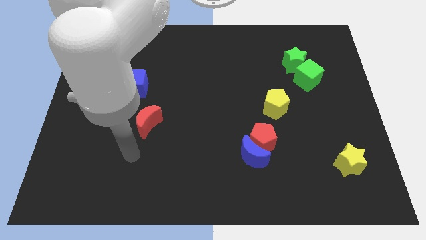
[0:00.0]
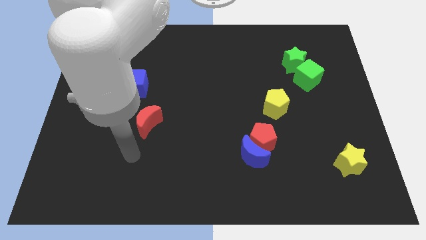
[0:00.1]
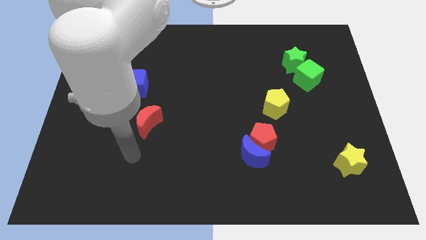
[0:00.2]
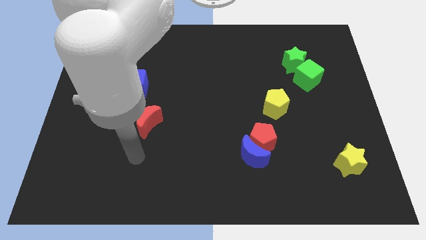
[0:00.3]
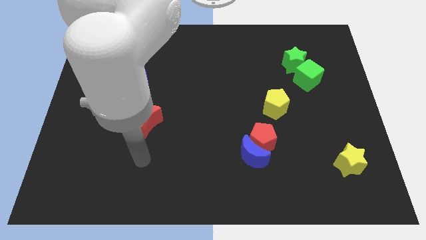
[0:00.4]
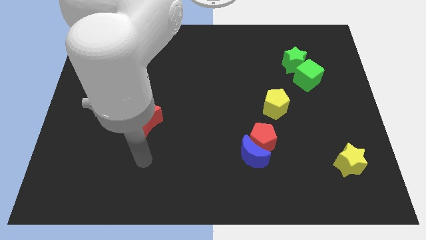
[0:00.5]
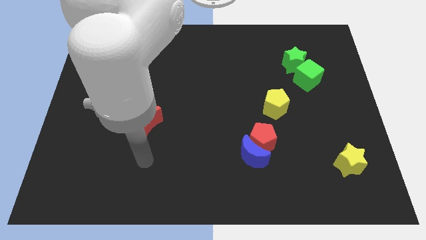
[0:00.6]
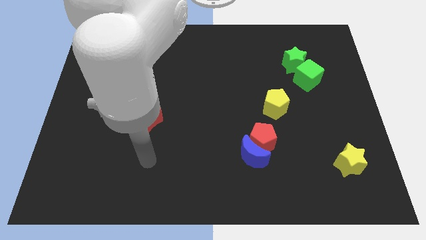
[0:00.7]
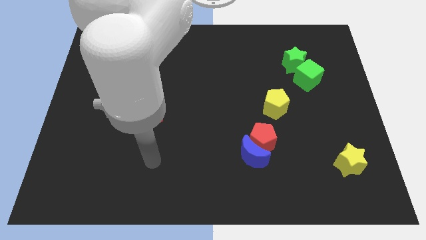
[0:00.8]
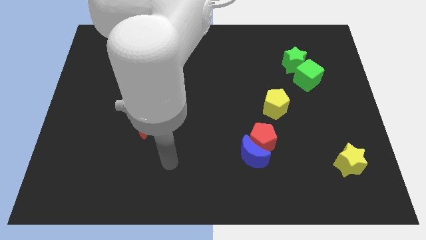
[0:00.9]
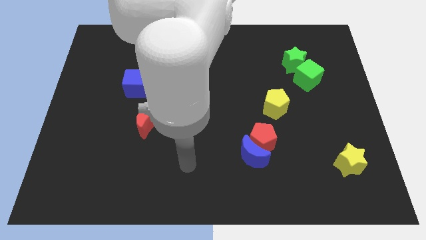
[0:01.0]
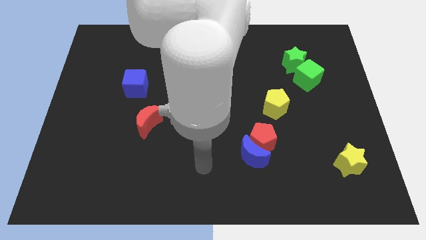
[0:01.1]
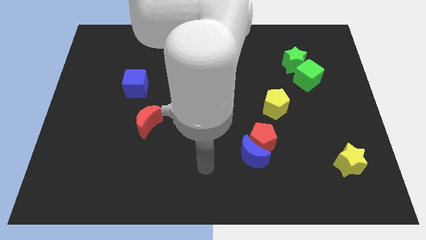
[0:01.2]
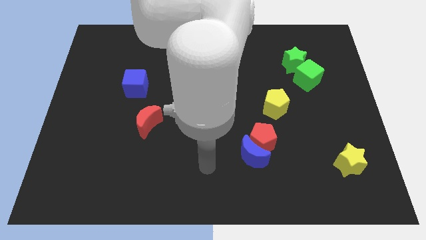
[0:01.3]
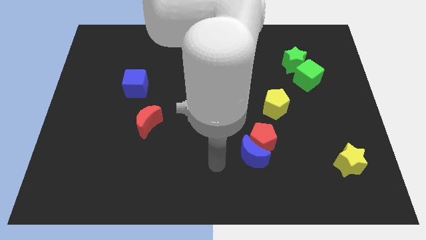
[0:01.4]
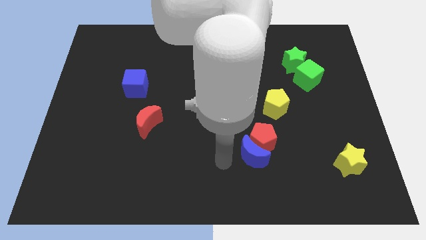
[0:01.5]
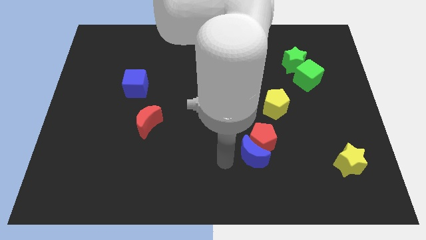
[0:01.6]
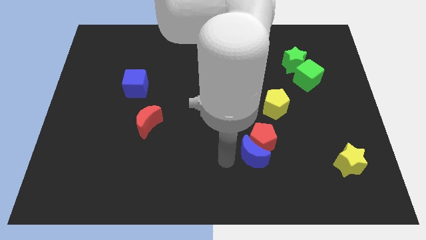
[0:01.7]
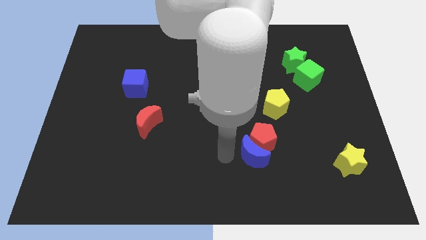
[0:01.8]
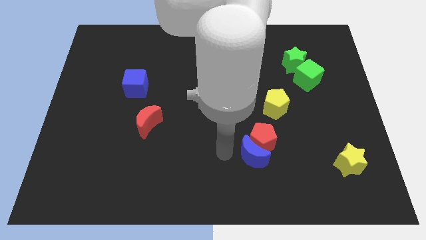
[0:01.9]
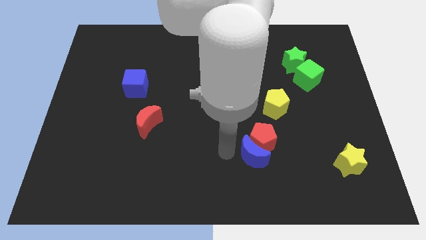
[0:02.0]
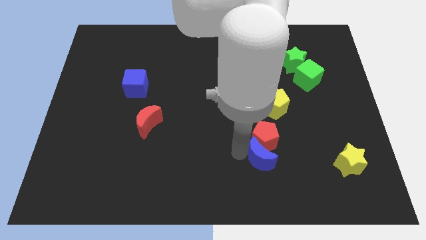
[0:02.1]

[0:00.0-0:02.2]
point your arm towards the top left side of the blue moon

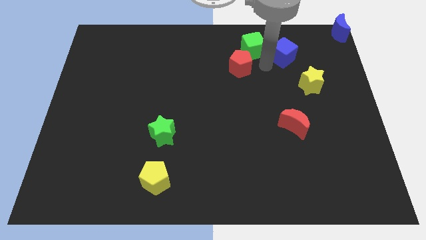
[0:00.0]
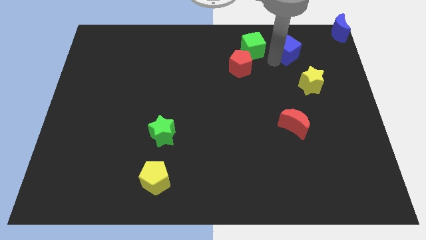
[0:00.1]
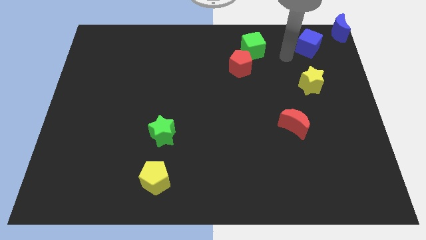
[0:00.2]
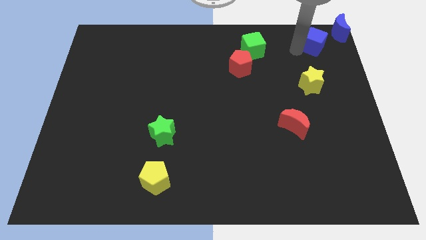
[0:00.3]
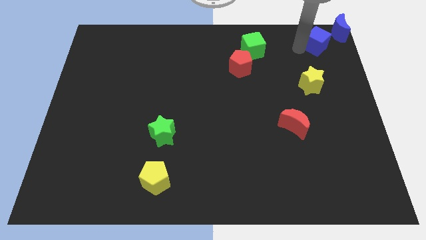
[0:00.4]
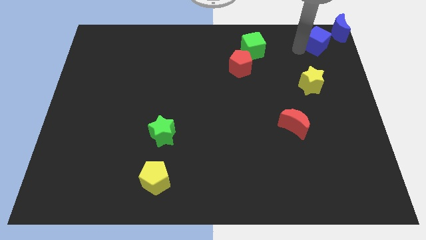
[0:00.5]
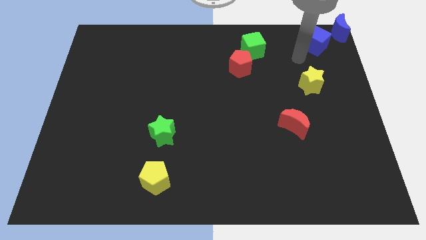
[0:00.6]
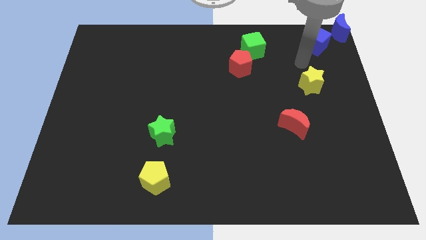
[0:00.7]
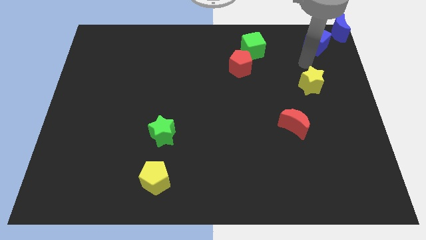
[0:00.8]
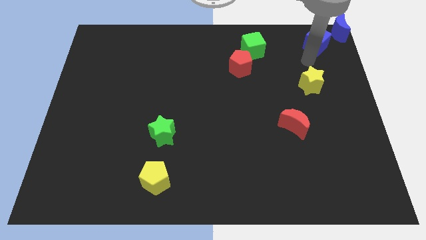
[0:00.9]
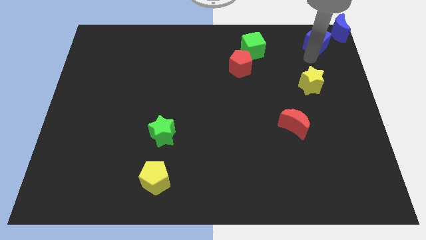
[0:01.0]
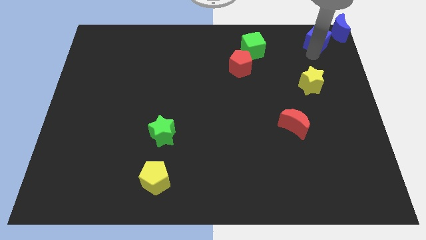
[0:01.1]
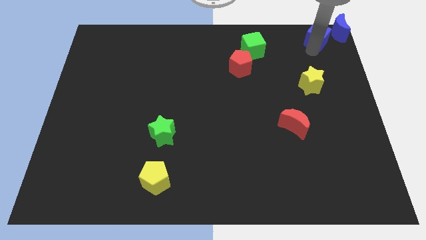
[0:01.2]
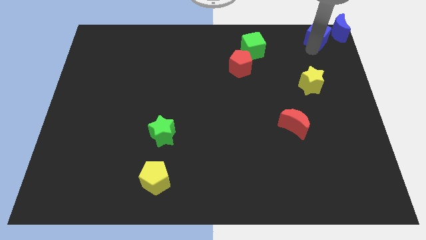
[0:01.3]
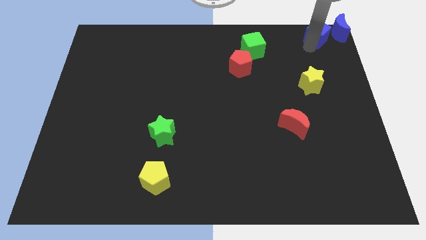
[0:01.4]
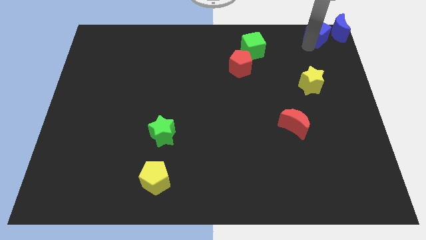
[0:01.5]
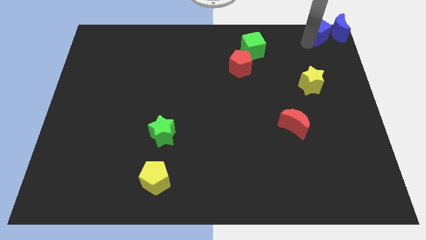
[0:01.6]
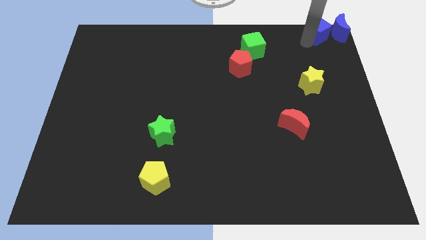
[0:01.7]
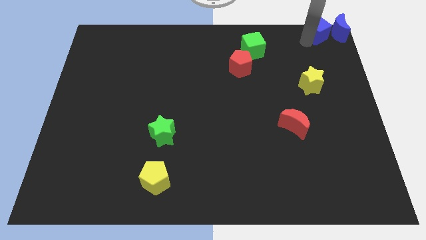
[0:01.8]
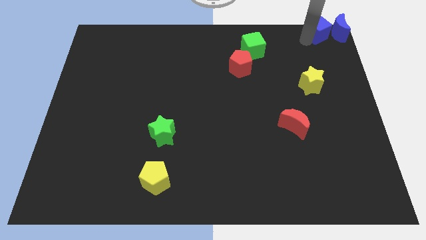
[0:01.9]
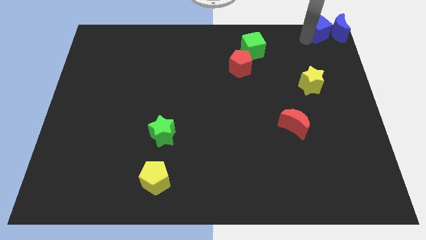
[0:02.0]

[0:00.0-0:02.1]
place the blue cube to the left of the blue moon

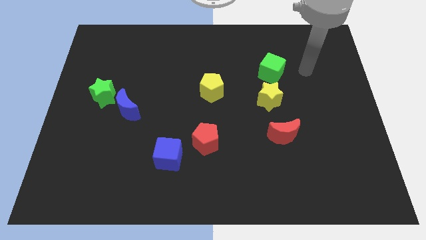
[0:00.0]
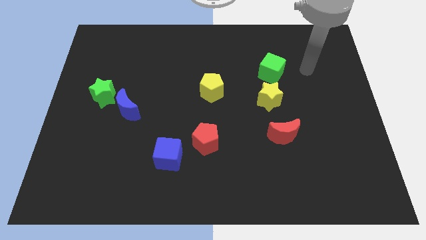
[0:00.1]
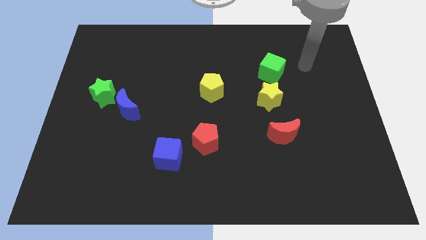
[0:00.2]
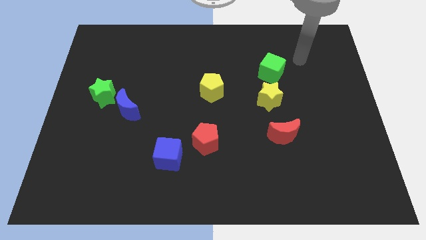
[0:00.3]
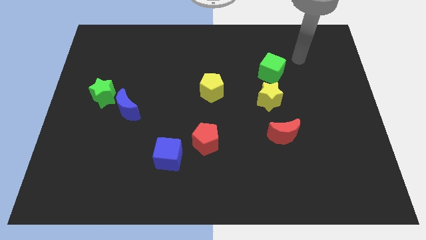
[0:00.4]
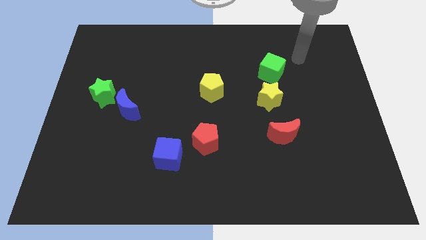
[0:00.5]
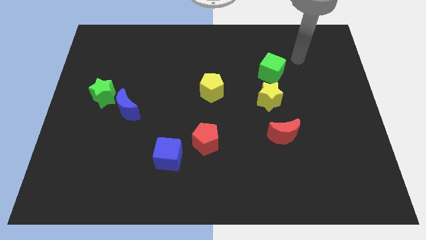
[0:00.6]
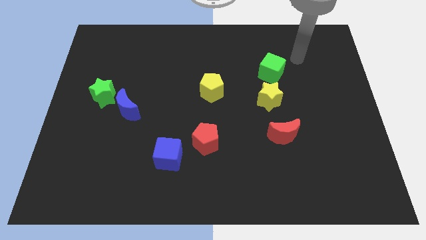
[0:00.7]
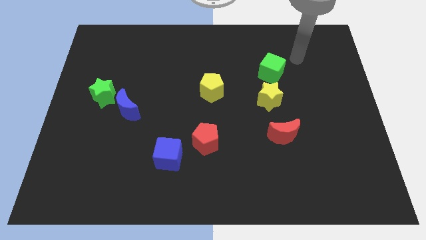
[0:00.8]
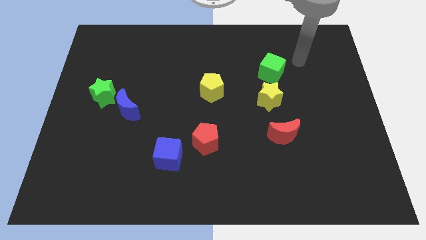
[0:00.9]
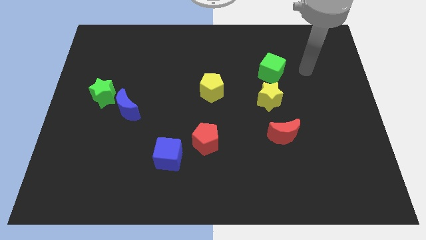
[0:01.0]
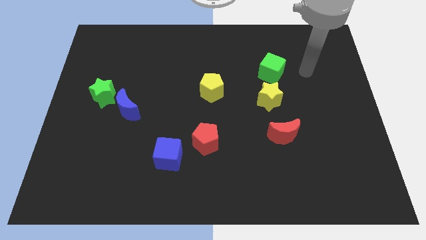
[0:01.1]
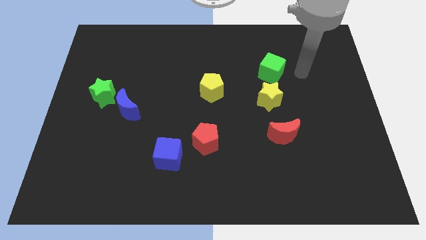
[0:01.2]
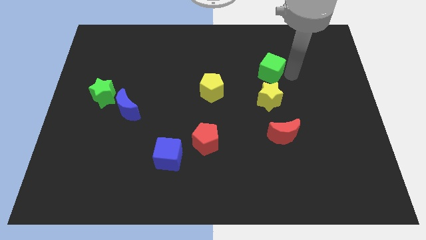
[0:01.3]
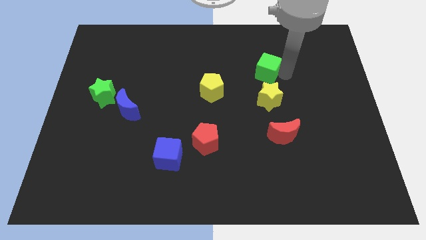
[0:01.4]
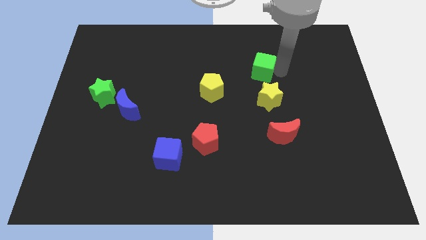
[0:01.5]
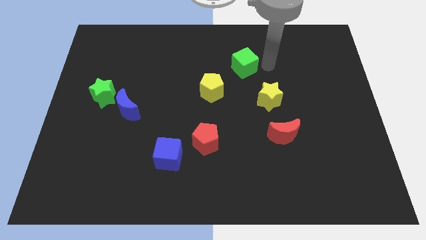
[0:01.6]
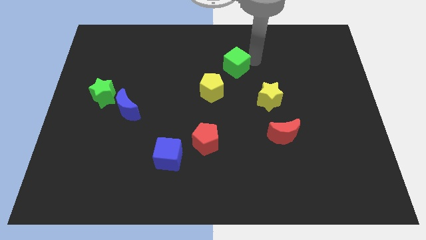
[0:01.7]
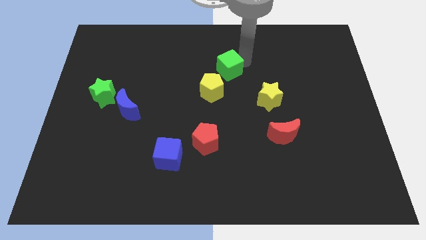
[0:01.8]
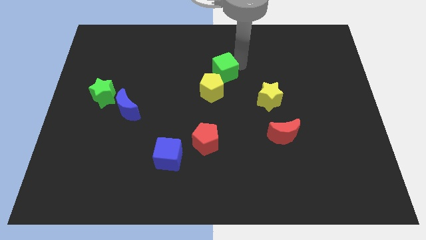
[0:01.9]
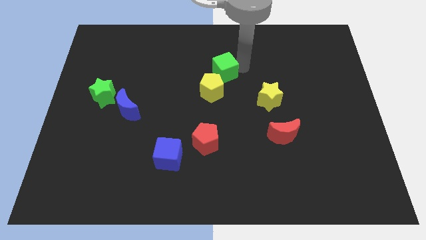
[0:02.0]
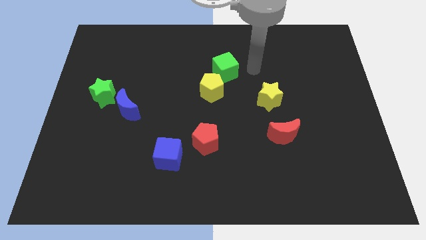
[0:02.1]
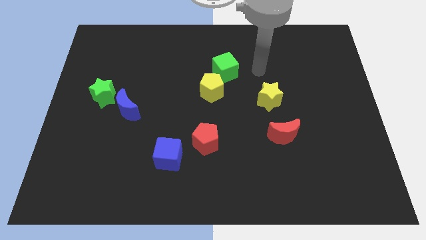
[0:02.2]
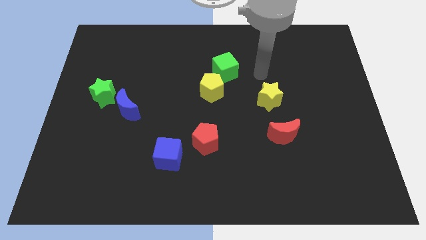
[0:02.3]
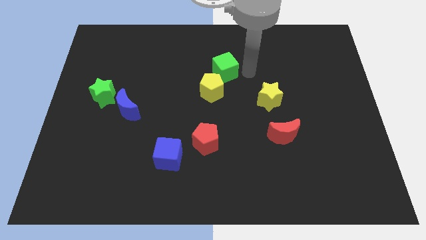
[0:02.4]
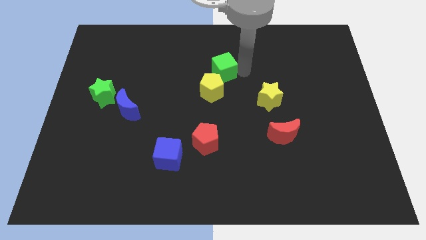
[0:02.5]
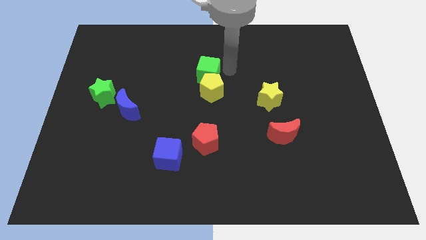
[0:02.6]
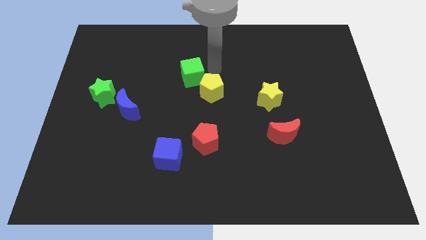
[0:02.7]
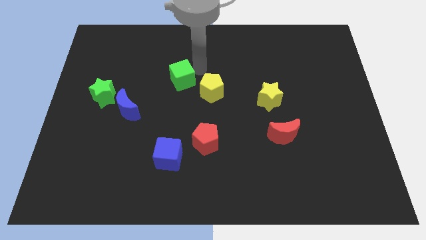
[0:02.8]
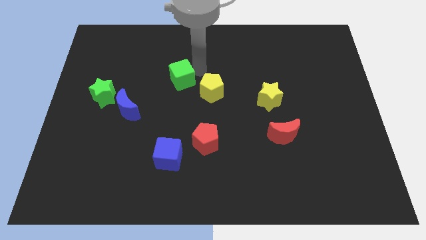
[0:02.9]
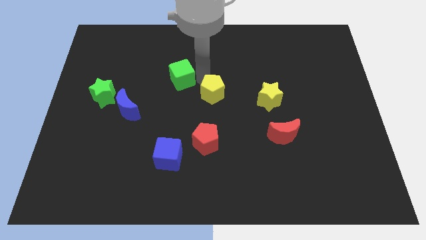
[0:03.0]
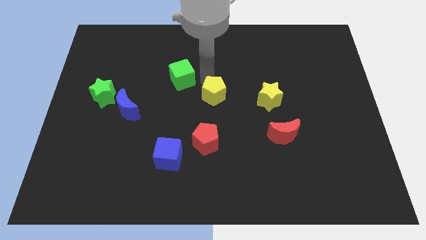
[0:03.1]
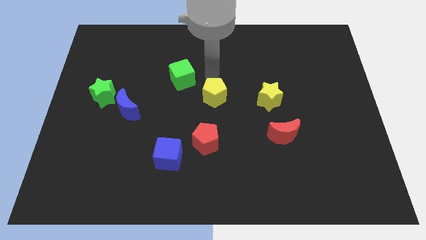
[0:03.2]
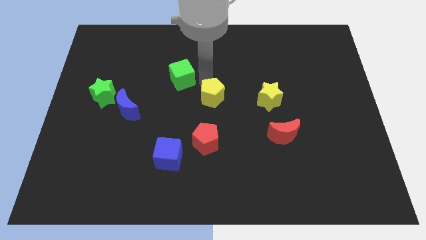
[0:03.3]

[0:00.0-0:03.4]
place the green cube diagonally top left to the yellow pentagon

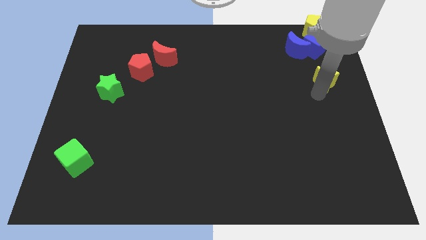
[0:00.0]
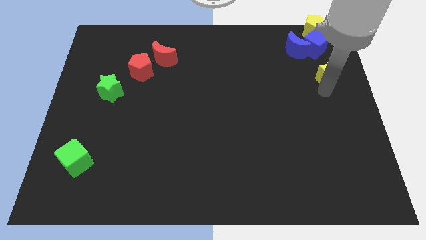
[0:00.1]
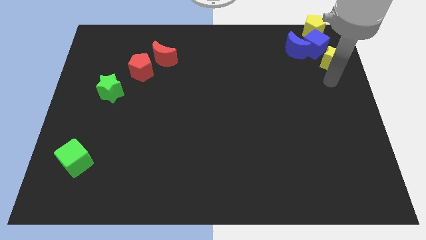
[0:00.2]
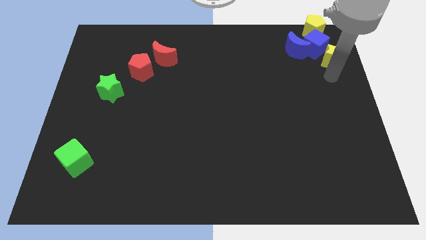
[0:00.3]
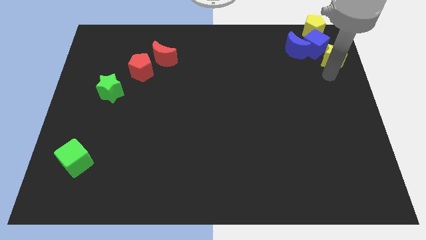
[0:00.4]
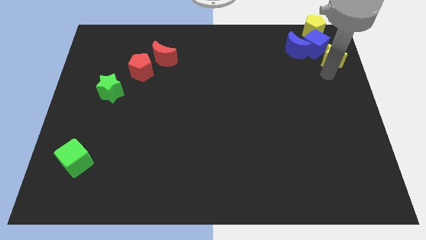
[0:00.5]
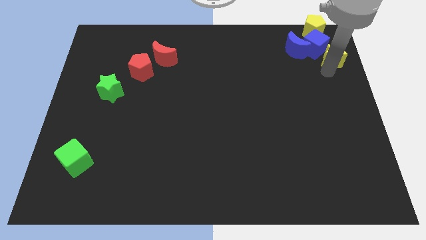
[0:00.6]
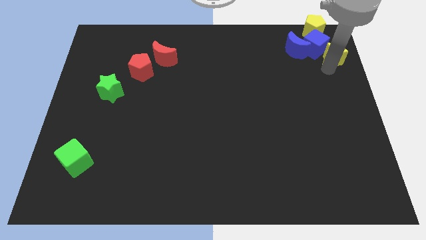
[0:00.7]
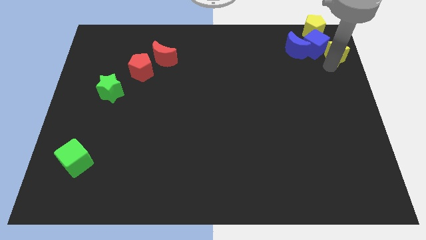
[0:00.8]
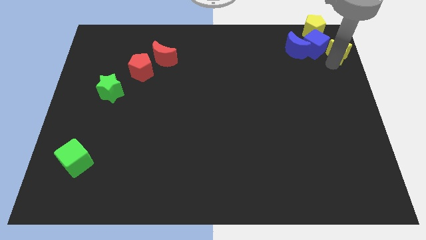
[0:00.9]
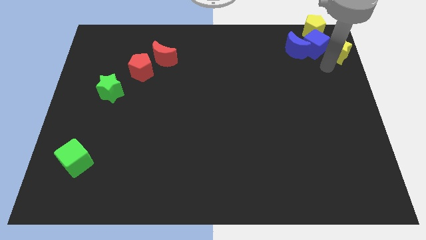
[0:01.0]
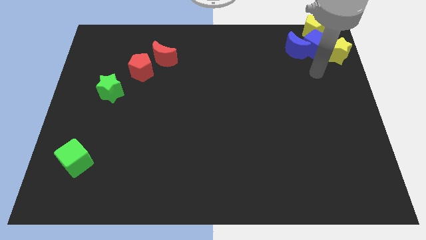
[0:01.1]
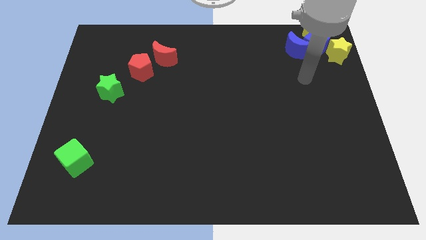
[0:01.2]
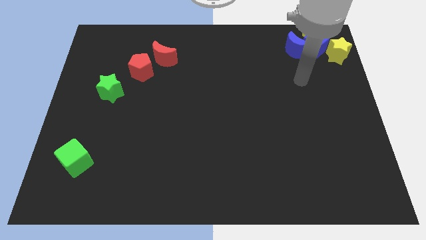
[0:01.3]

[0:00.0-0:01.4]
put the yellow star close to the blue cube
